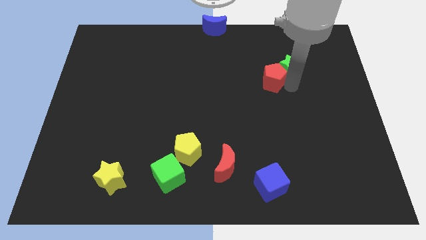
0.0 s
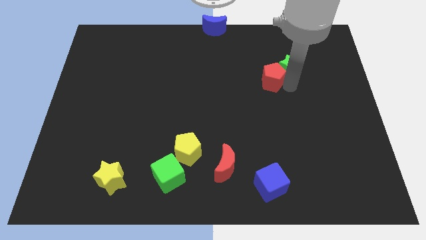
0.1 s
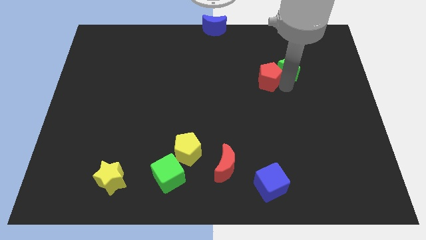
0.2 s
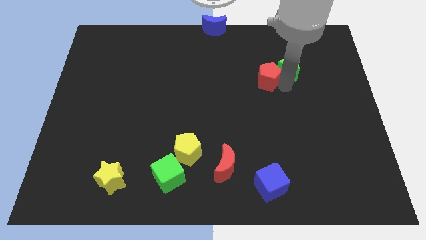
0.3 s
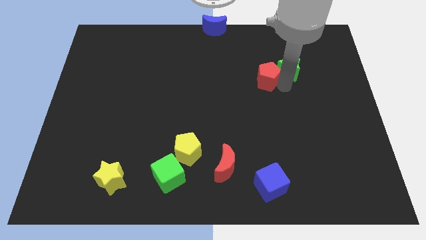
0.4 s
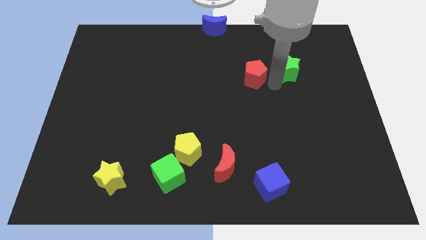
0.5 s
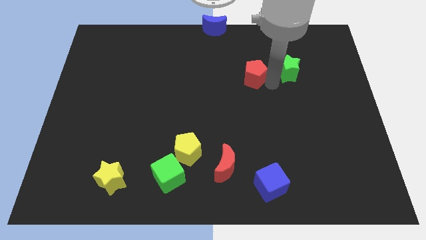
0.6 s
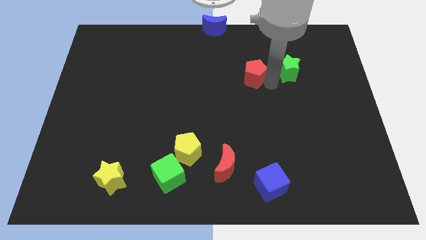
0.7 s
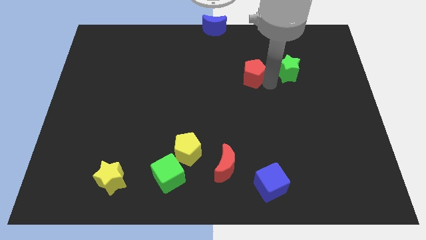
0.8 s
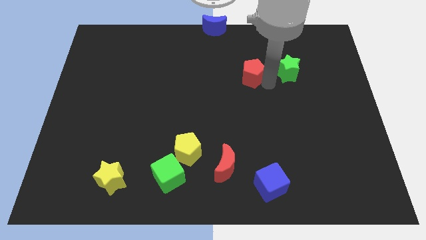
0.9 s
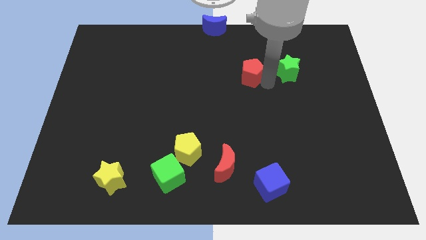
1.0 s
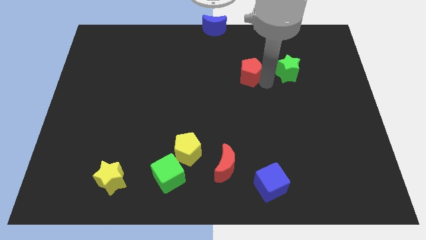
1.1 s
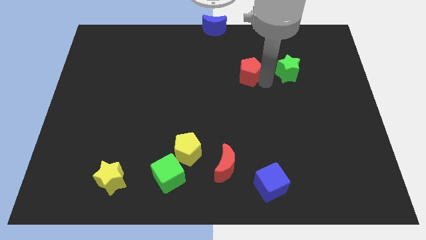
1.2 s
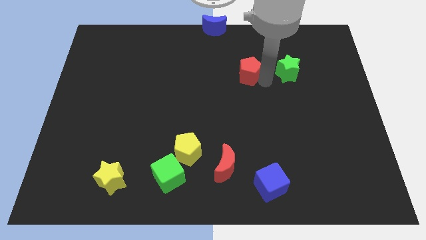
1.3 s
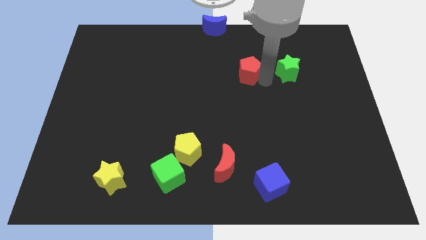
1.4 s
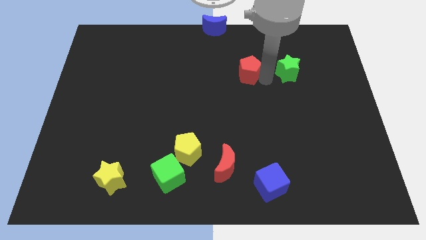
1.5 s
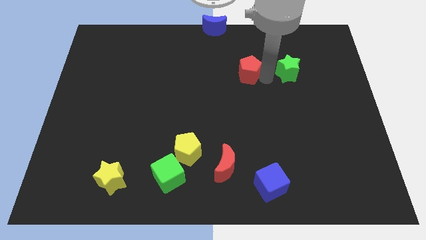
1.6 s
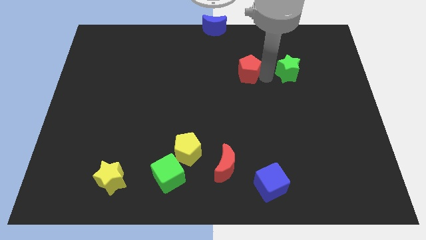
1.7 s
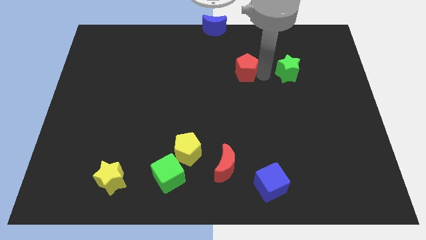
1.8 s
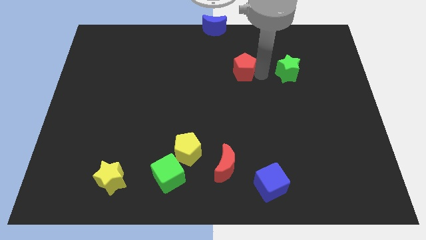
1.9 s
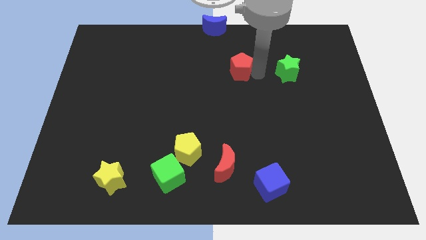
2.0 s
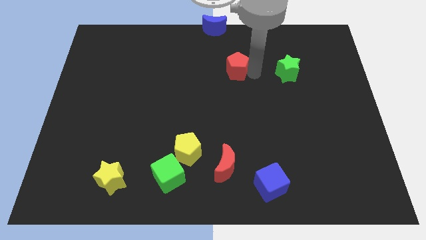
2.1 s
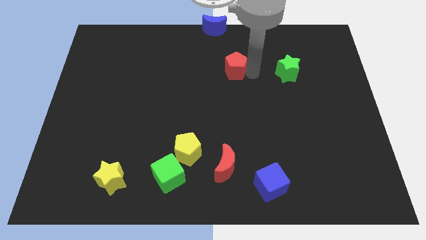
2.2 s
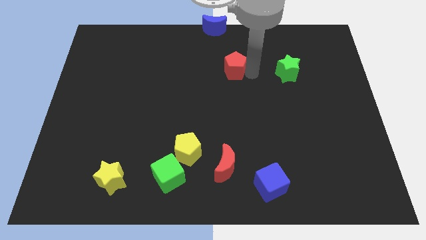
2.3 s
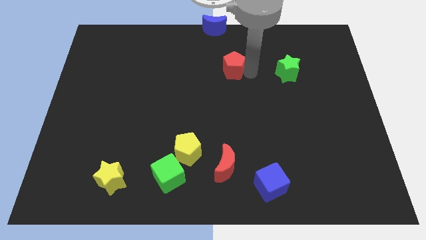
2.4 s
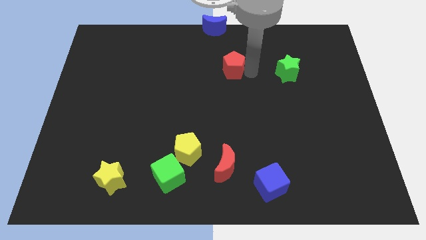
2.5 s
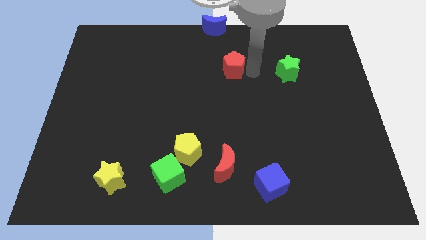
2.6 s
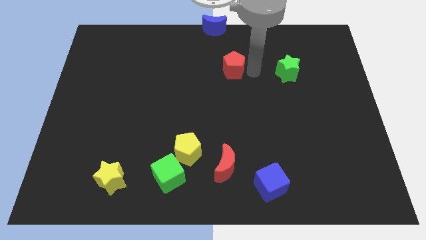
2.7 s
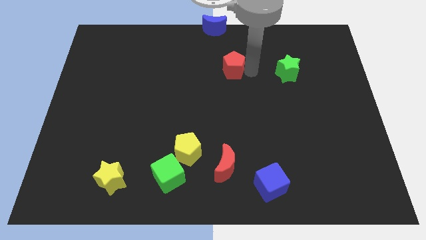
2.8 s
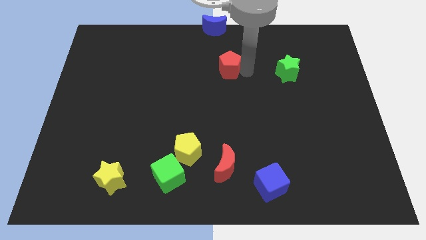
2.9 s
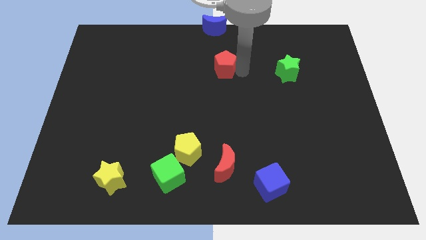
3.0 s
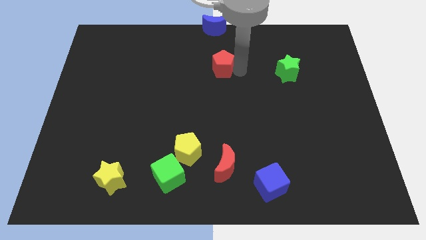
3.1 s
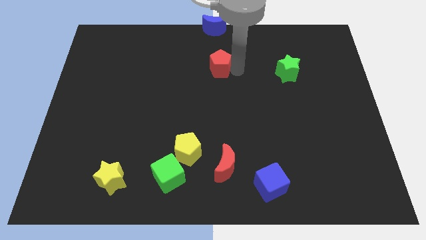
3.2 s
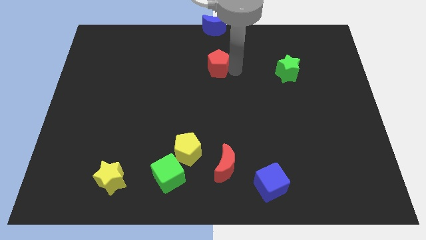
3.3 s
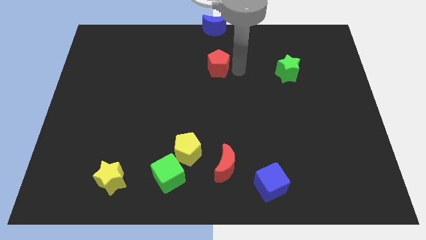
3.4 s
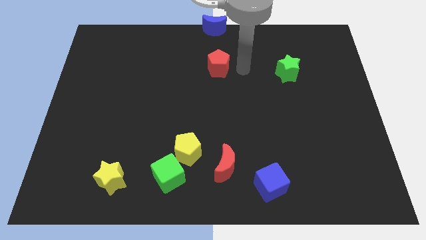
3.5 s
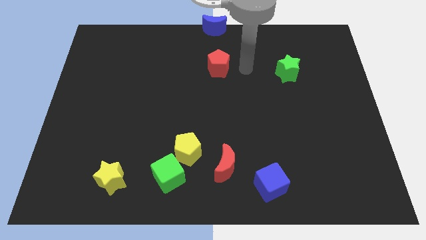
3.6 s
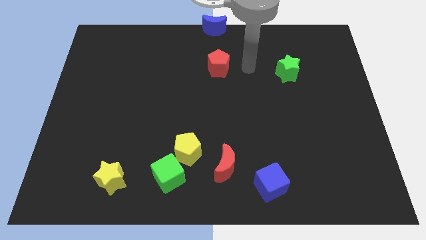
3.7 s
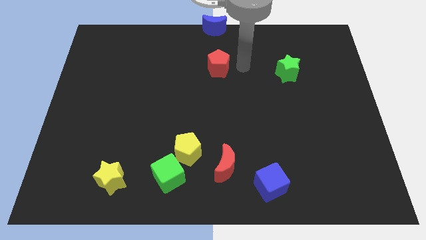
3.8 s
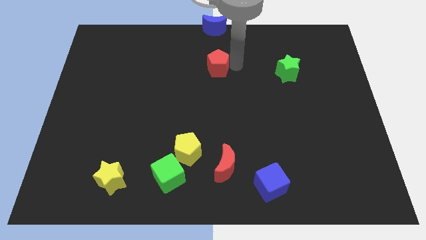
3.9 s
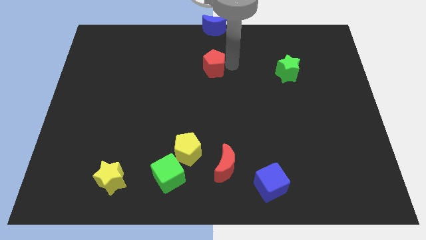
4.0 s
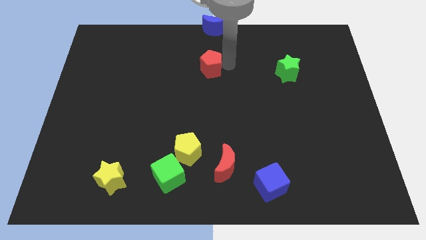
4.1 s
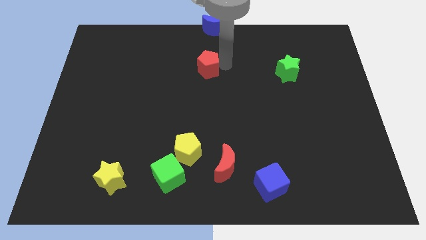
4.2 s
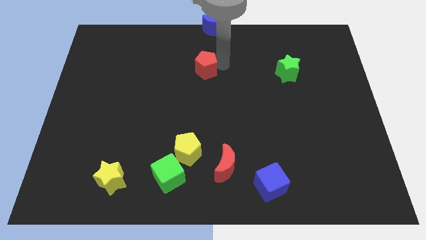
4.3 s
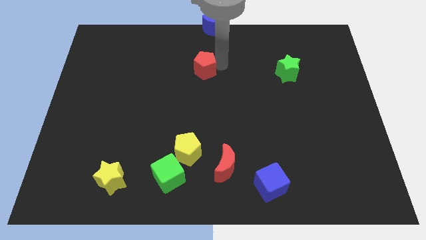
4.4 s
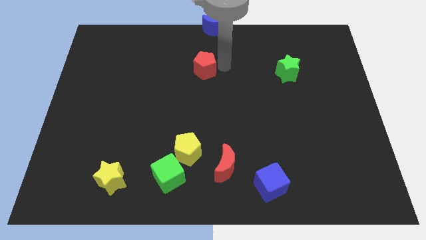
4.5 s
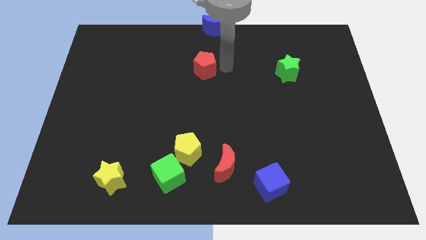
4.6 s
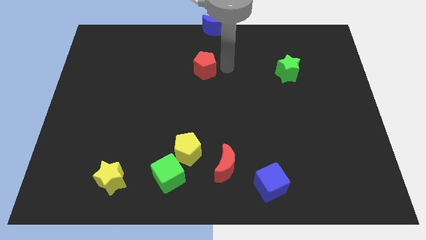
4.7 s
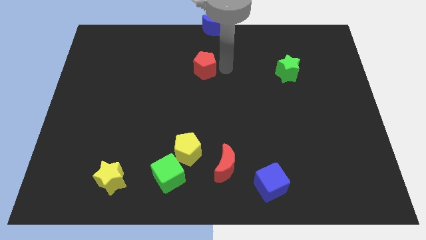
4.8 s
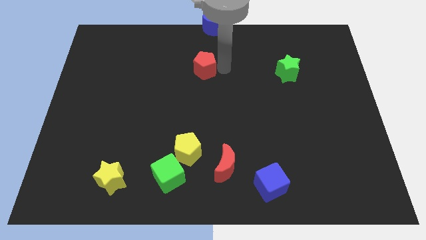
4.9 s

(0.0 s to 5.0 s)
separate the red pentagon from the green star

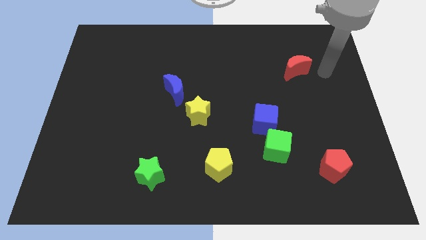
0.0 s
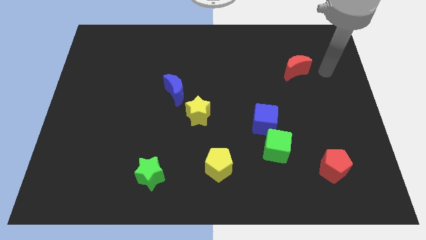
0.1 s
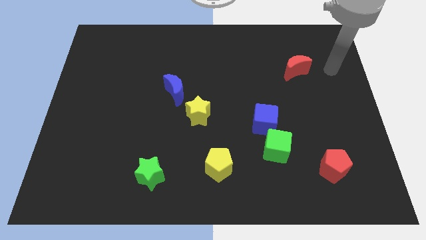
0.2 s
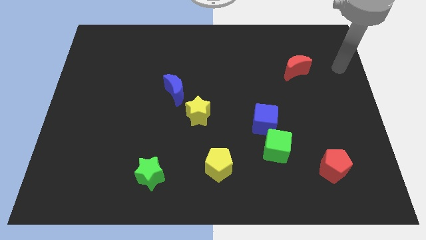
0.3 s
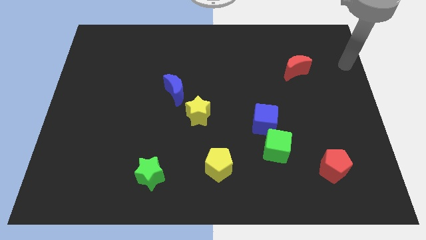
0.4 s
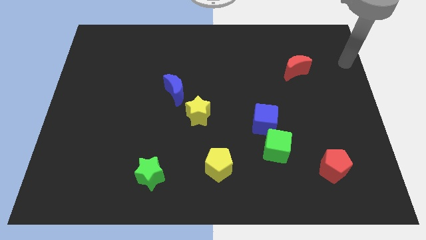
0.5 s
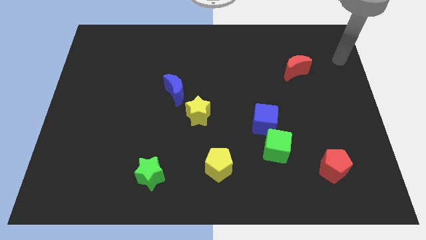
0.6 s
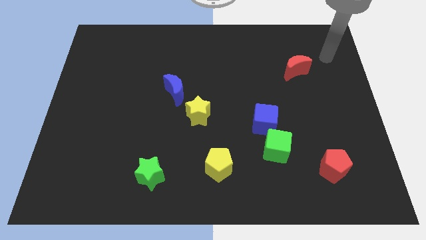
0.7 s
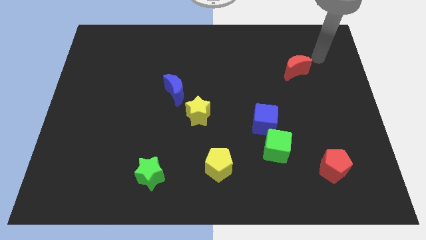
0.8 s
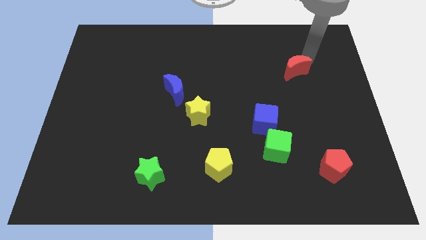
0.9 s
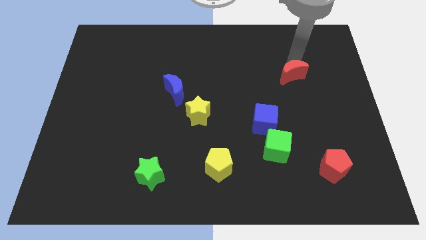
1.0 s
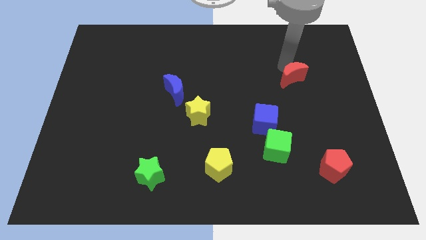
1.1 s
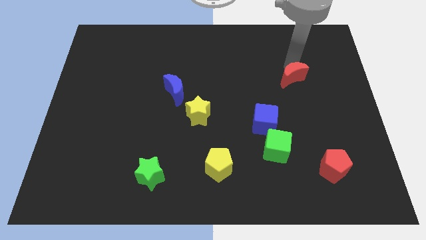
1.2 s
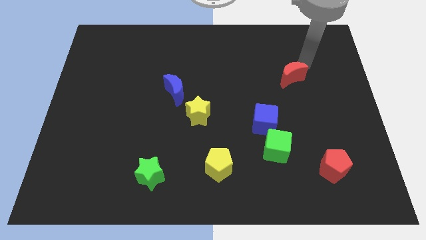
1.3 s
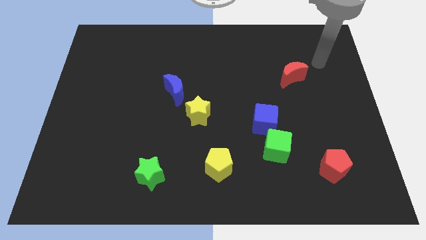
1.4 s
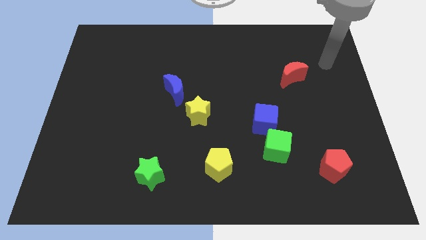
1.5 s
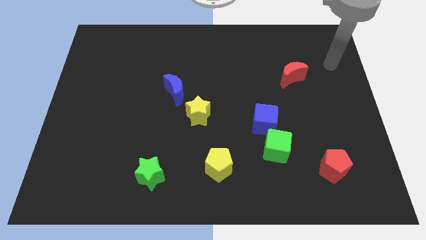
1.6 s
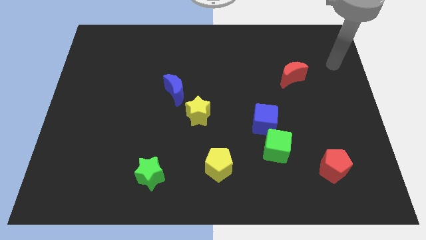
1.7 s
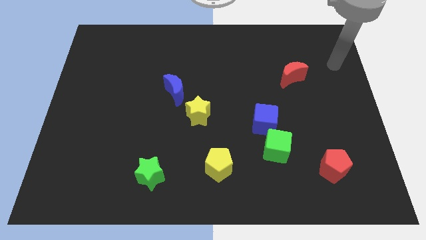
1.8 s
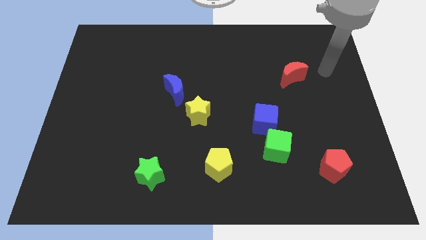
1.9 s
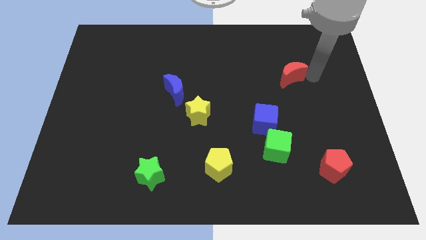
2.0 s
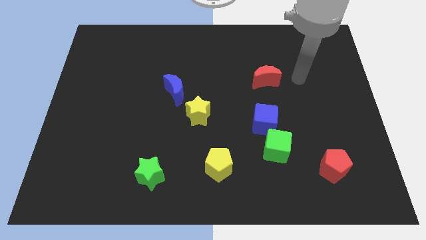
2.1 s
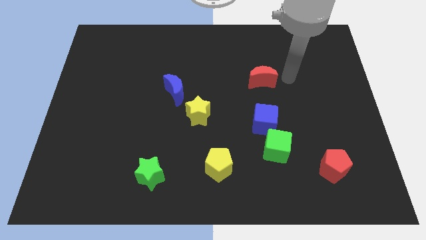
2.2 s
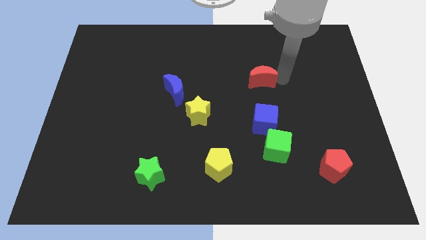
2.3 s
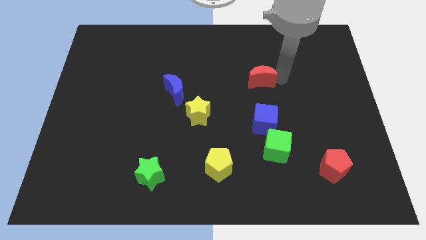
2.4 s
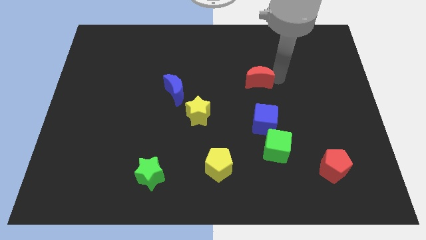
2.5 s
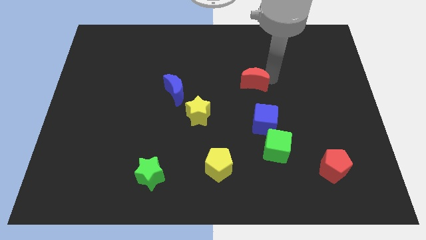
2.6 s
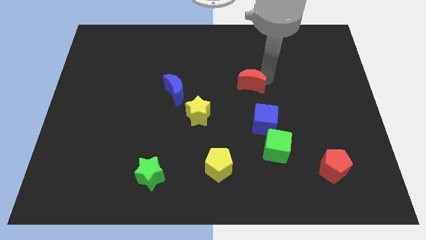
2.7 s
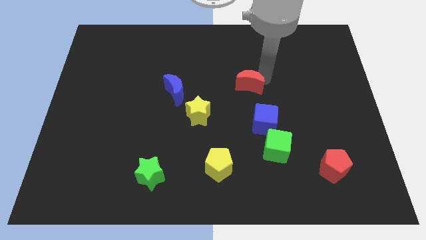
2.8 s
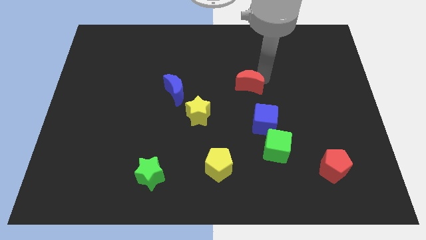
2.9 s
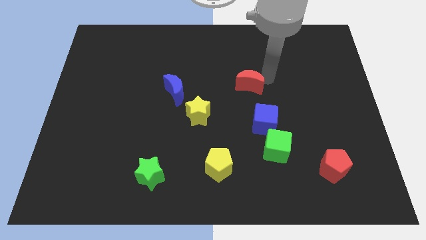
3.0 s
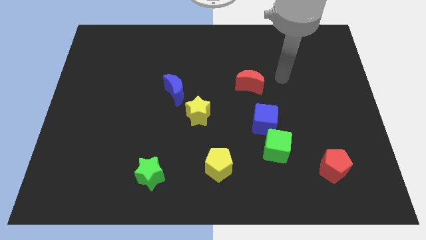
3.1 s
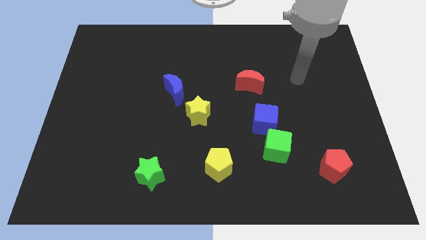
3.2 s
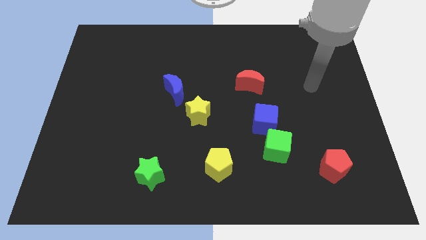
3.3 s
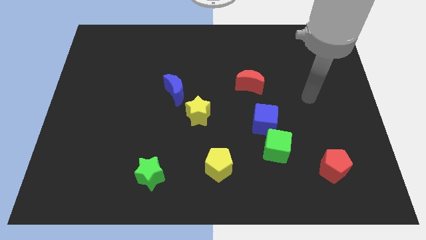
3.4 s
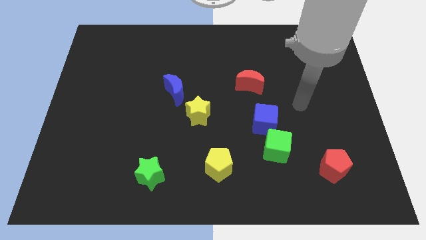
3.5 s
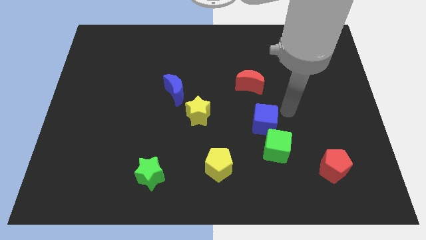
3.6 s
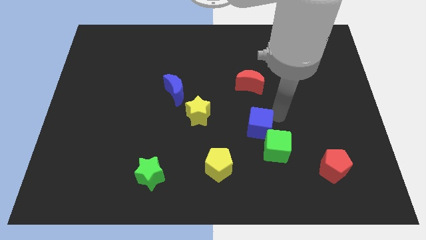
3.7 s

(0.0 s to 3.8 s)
push the red crescent to the left

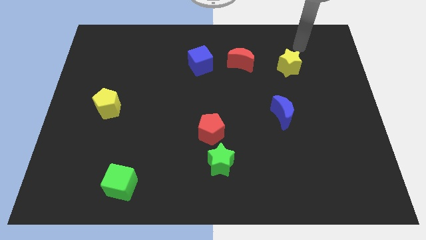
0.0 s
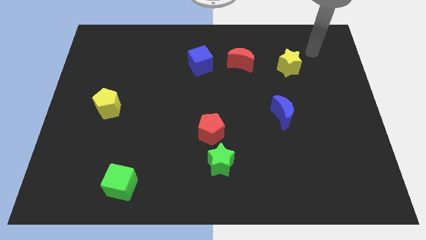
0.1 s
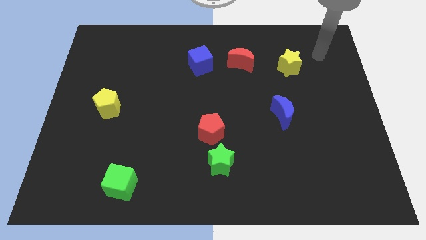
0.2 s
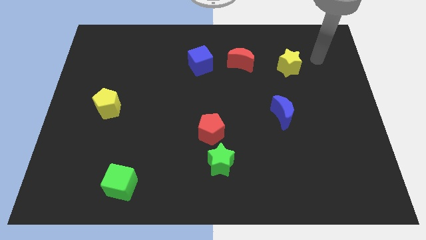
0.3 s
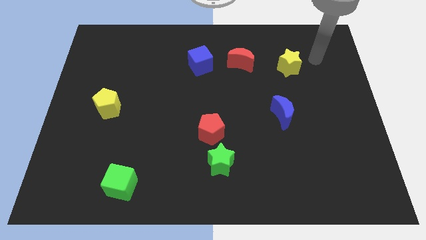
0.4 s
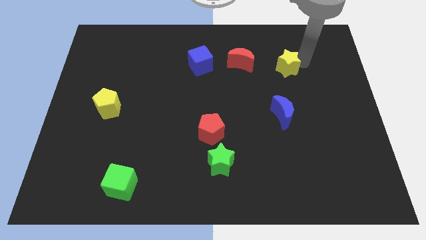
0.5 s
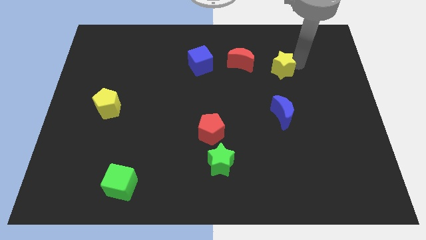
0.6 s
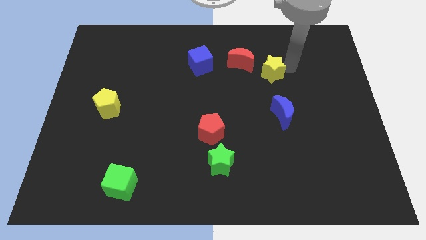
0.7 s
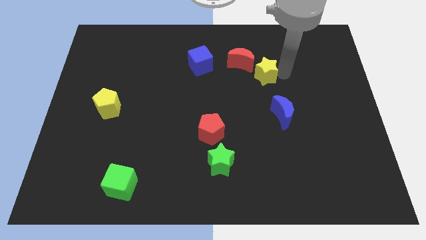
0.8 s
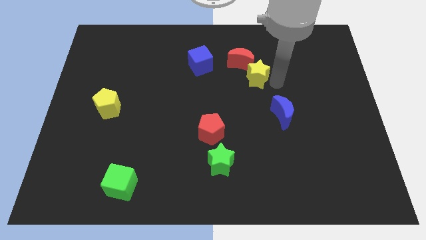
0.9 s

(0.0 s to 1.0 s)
place the yellow star right diagonally towards red crescent
